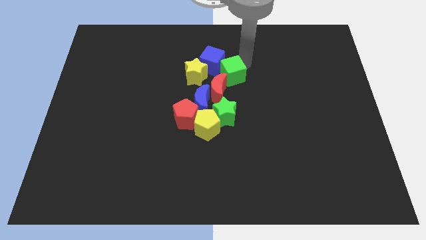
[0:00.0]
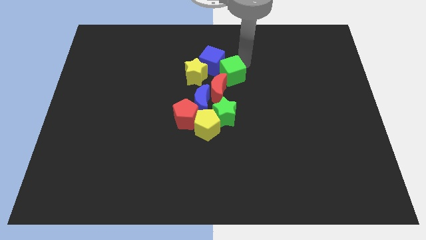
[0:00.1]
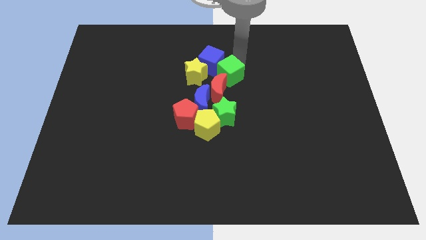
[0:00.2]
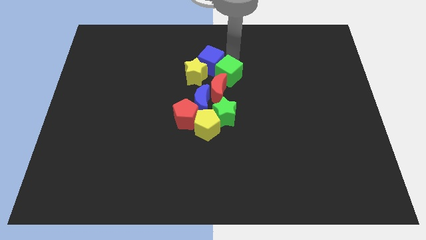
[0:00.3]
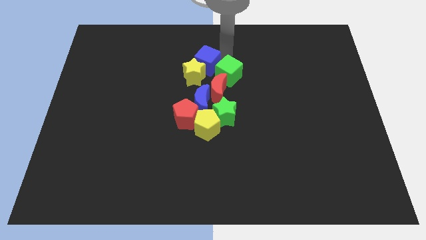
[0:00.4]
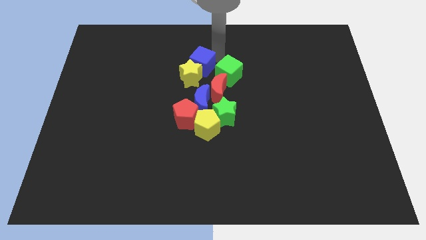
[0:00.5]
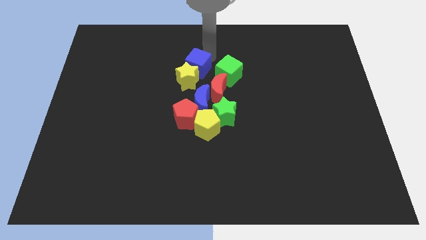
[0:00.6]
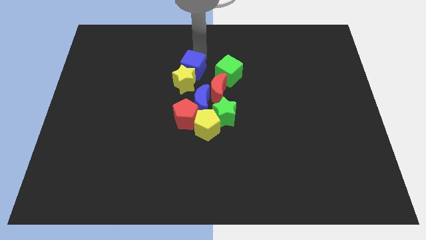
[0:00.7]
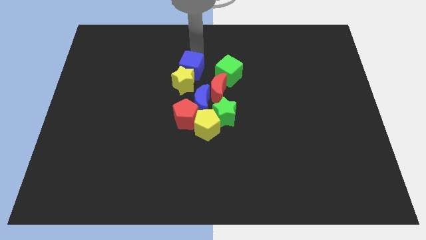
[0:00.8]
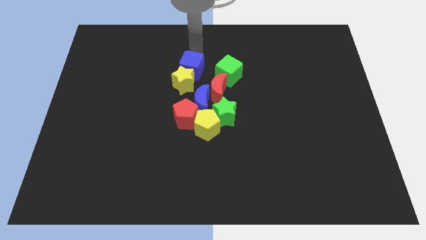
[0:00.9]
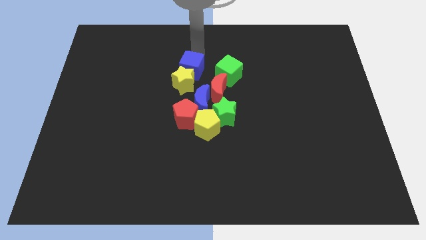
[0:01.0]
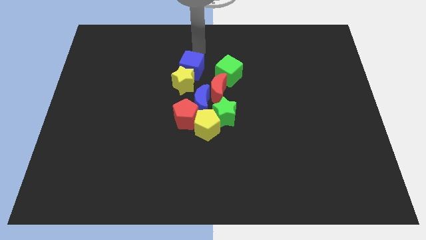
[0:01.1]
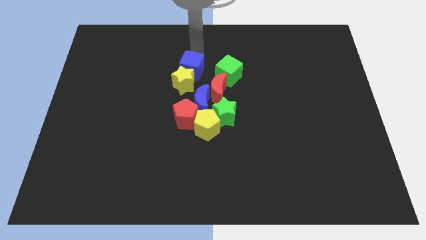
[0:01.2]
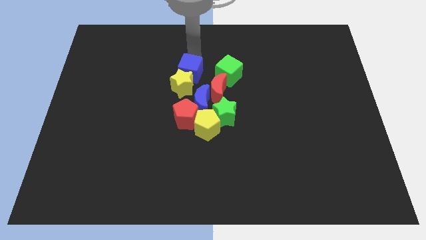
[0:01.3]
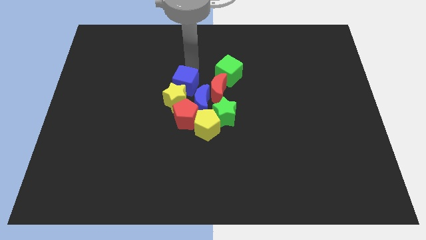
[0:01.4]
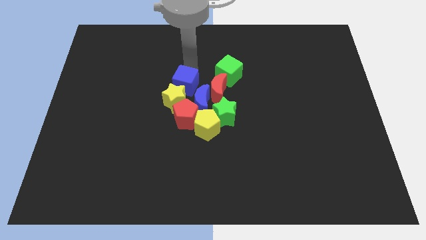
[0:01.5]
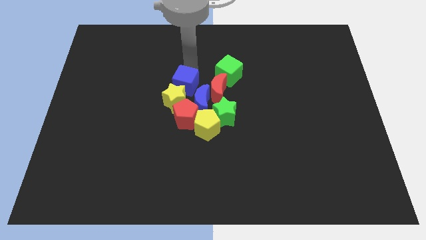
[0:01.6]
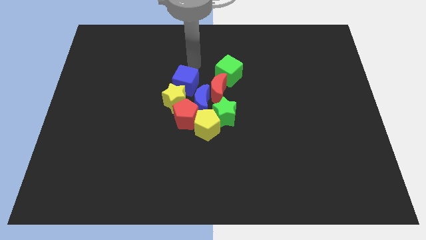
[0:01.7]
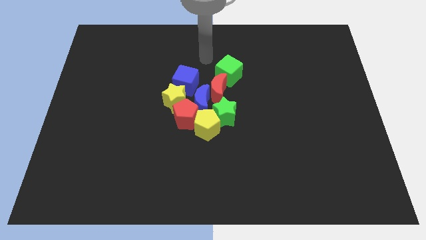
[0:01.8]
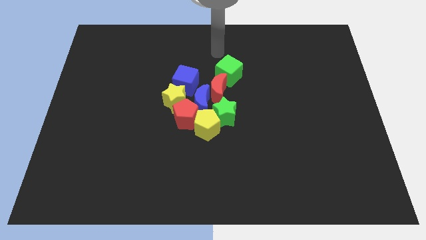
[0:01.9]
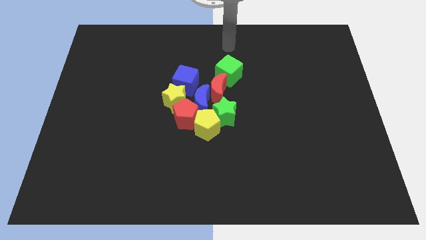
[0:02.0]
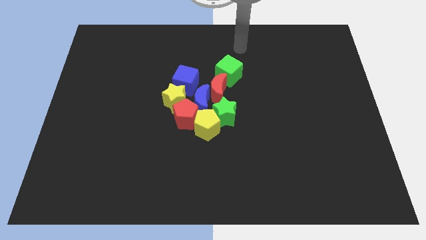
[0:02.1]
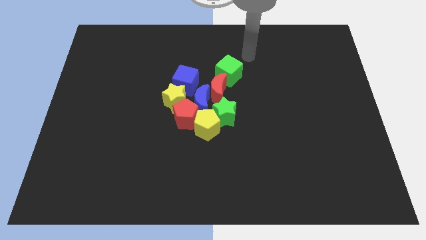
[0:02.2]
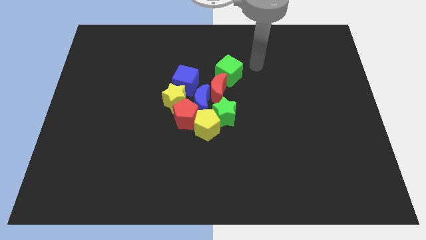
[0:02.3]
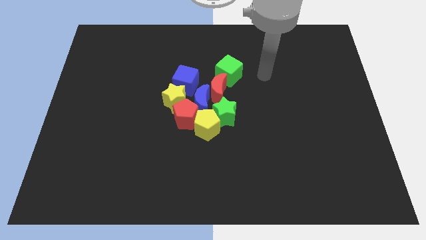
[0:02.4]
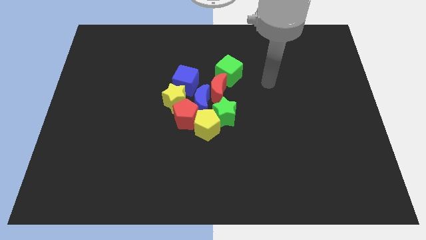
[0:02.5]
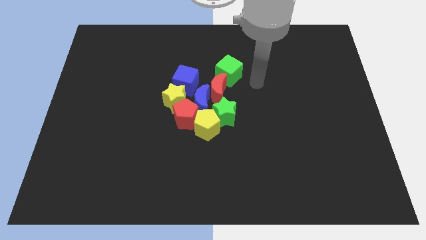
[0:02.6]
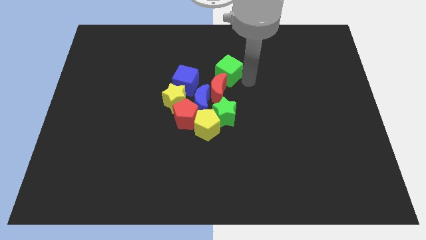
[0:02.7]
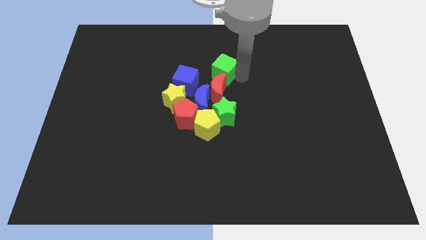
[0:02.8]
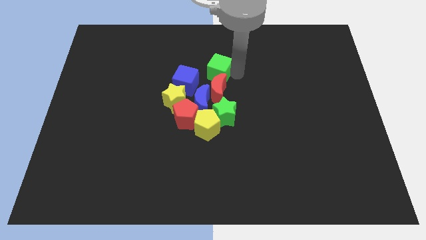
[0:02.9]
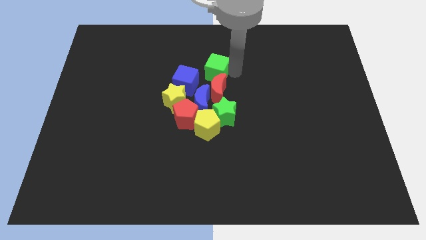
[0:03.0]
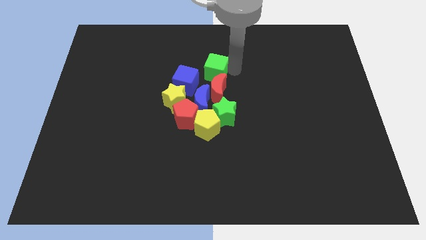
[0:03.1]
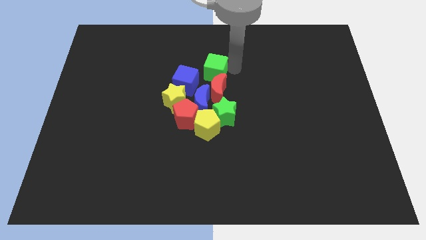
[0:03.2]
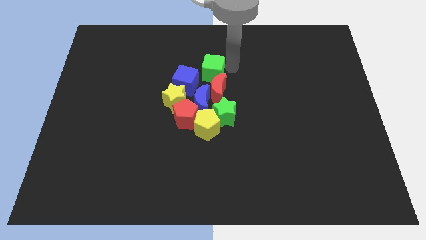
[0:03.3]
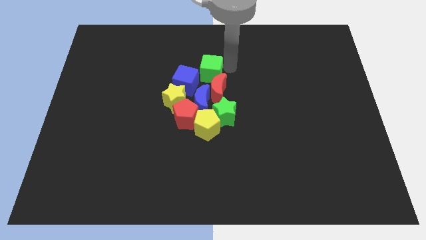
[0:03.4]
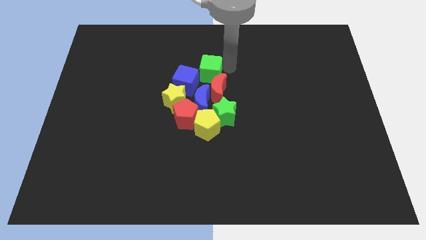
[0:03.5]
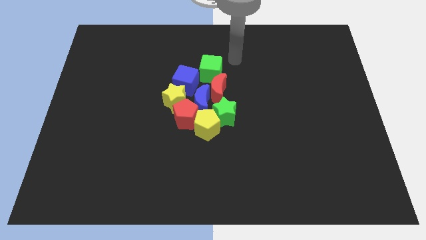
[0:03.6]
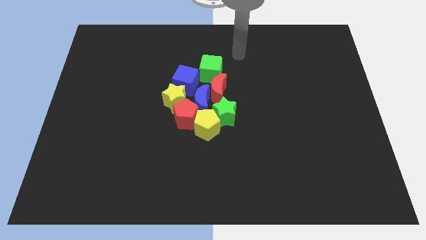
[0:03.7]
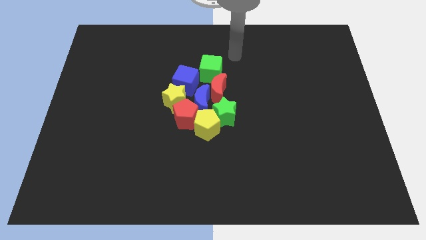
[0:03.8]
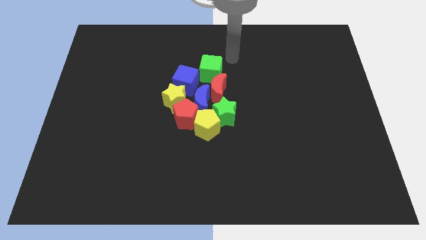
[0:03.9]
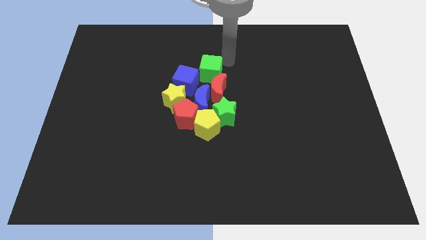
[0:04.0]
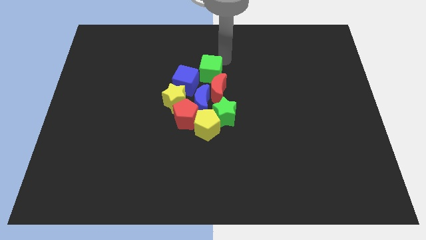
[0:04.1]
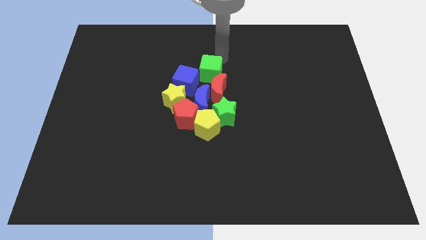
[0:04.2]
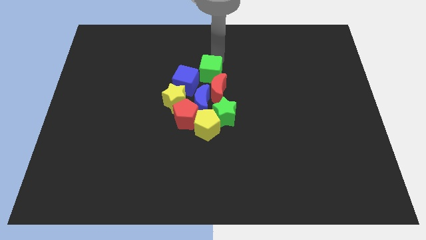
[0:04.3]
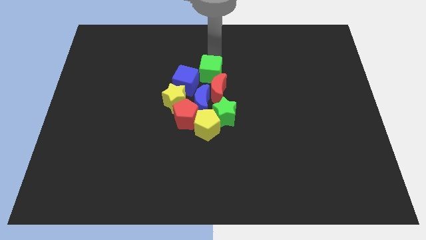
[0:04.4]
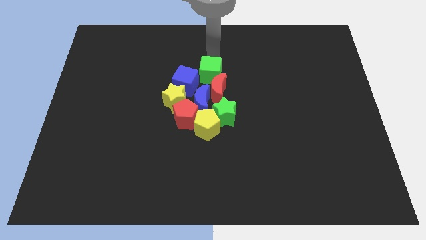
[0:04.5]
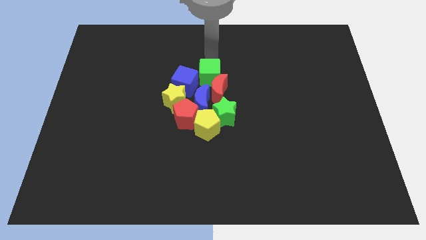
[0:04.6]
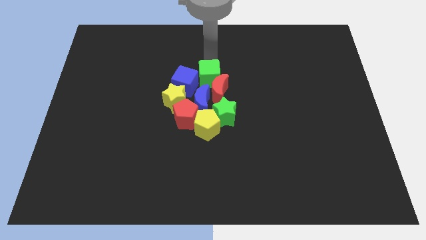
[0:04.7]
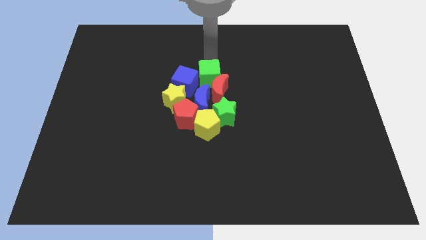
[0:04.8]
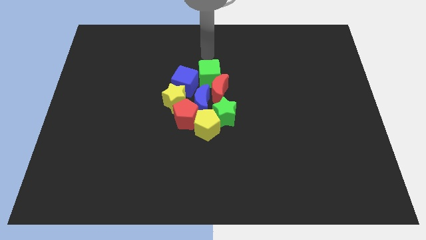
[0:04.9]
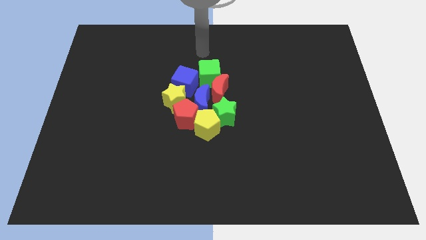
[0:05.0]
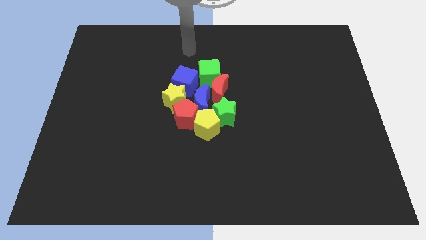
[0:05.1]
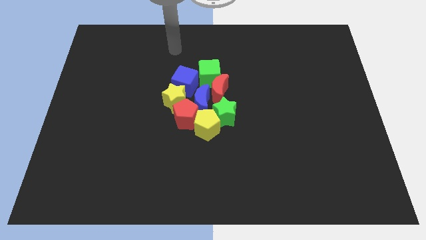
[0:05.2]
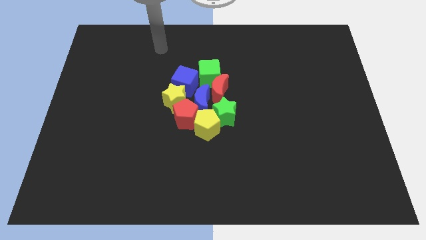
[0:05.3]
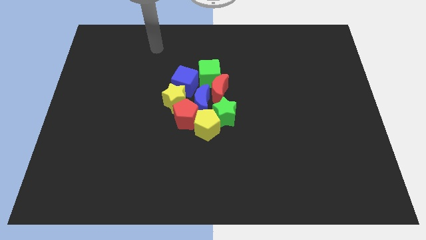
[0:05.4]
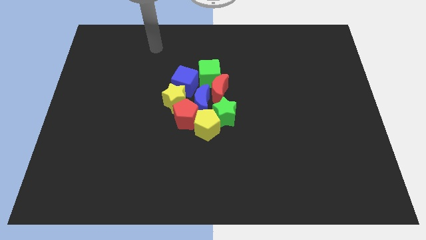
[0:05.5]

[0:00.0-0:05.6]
adjust the cubes and the yellow star to the center of the board

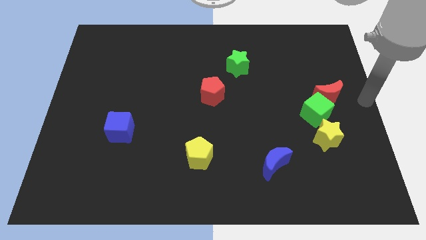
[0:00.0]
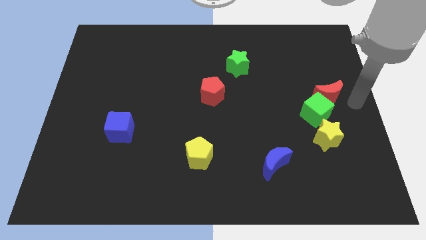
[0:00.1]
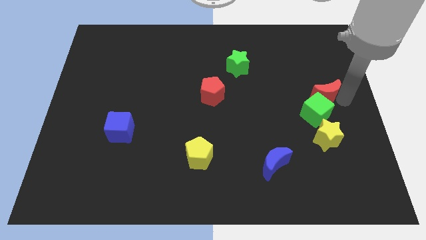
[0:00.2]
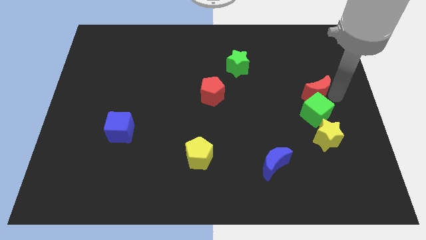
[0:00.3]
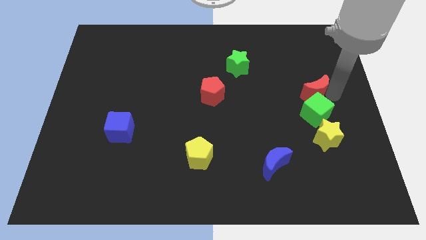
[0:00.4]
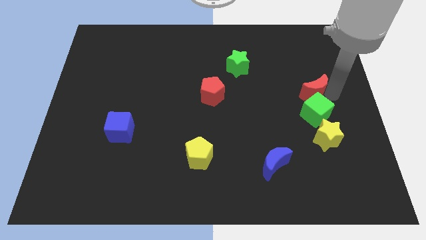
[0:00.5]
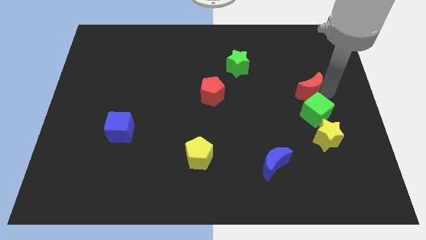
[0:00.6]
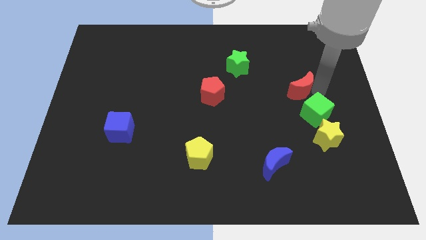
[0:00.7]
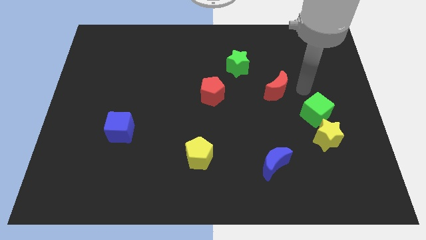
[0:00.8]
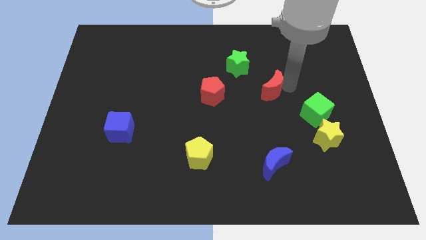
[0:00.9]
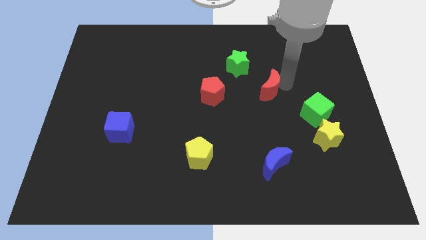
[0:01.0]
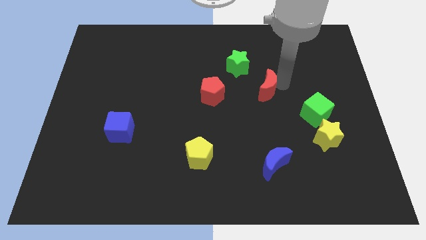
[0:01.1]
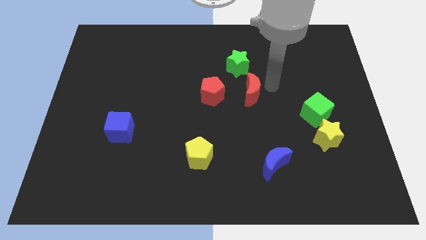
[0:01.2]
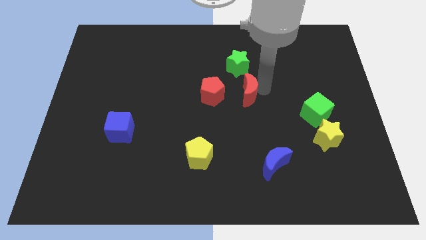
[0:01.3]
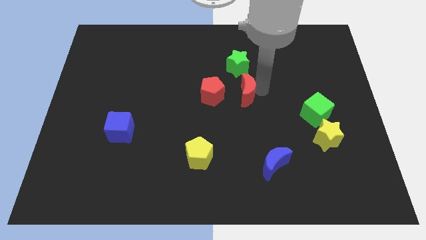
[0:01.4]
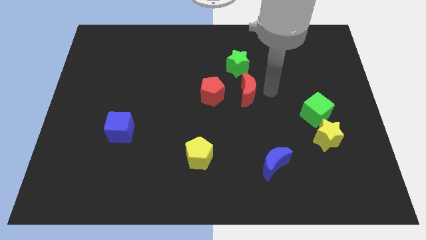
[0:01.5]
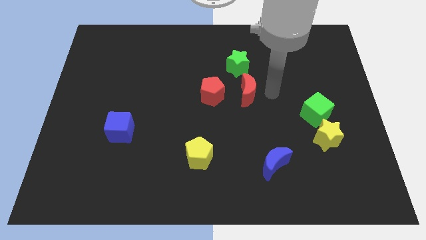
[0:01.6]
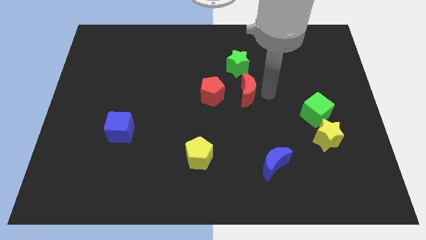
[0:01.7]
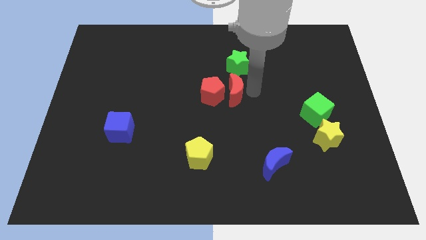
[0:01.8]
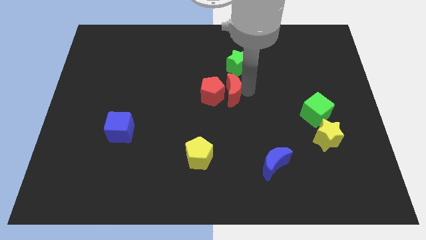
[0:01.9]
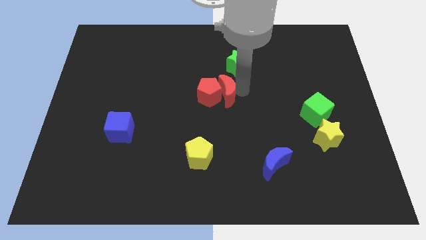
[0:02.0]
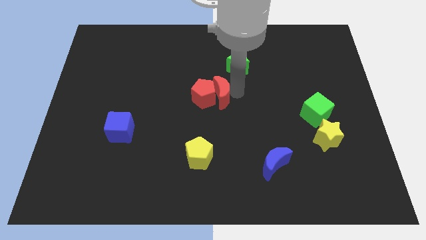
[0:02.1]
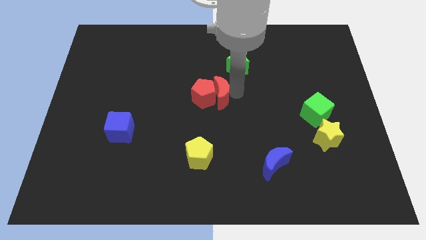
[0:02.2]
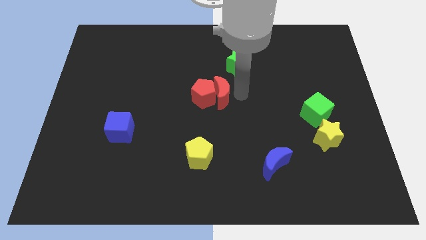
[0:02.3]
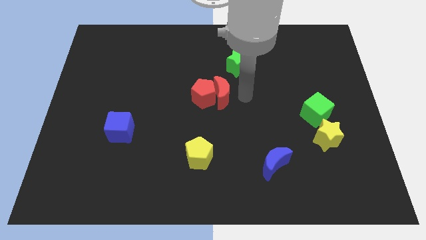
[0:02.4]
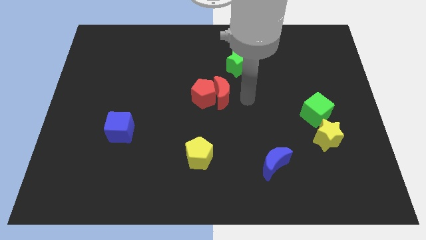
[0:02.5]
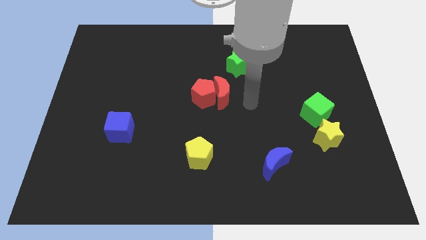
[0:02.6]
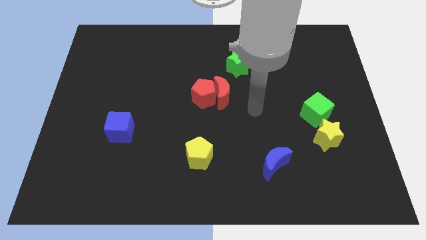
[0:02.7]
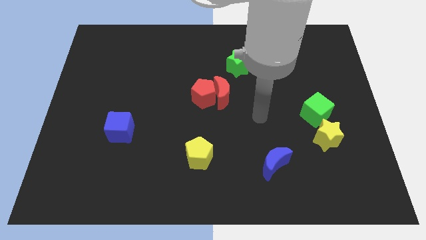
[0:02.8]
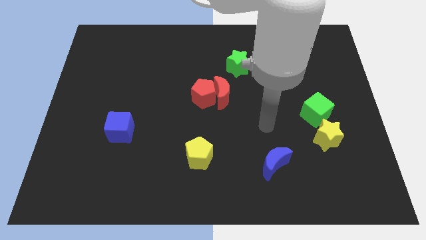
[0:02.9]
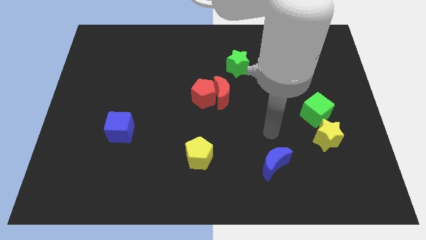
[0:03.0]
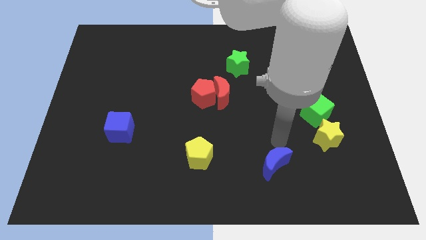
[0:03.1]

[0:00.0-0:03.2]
move the red moon into the red pentagon

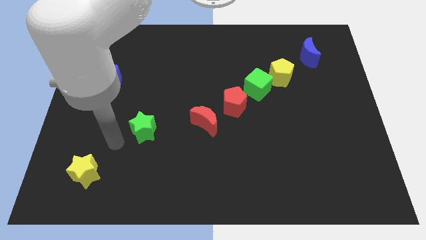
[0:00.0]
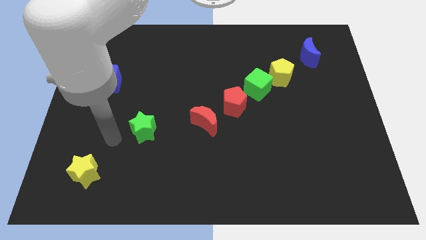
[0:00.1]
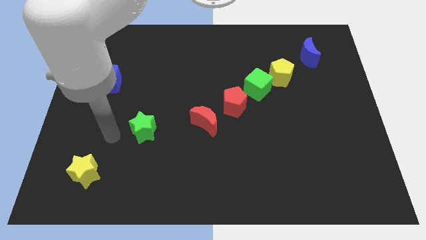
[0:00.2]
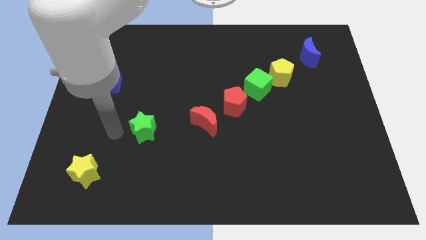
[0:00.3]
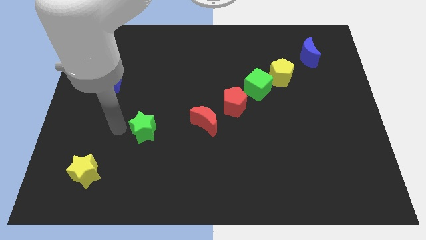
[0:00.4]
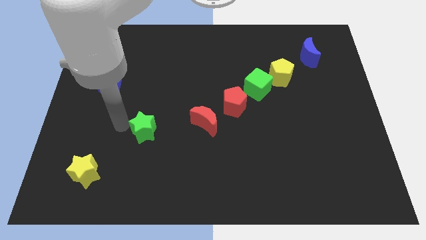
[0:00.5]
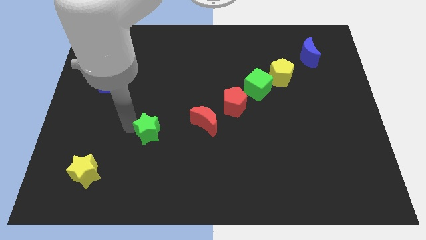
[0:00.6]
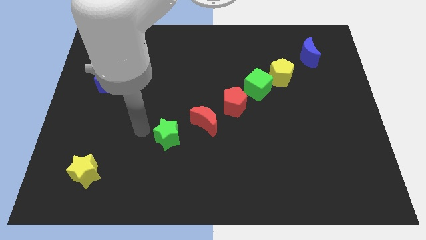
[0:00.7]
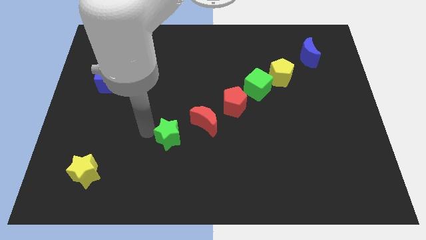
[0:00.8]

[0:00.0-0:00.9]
move the green star diagonally towards the red moon
